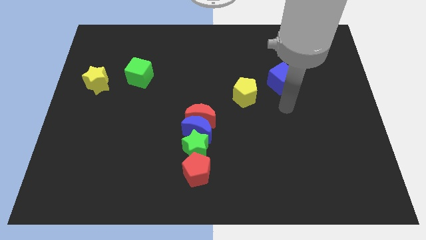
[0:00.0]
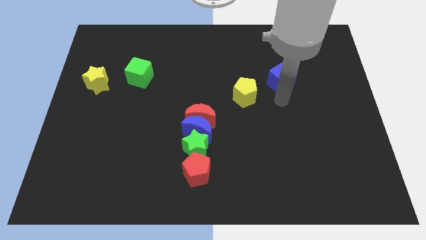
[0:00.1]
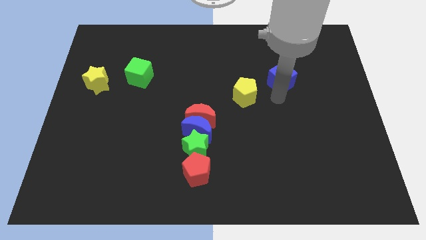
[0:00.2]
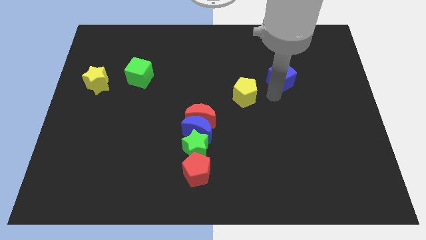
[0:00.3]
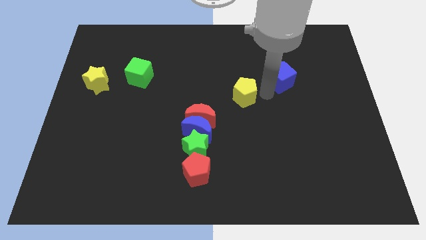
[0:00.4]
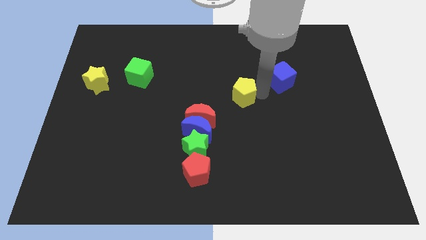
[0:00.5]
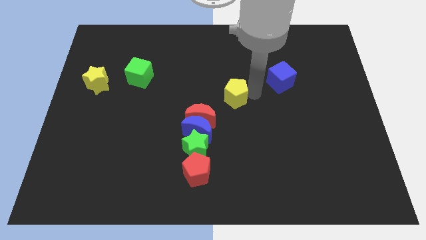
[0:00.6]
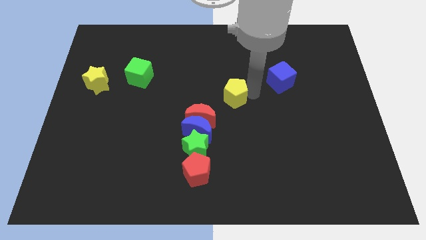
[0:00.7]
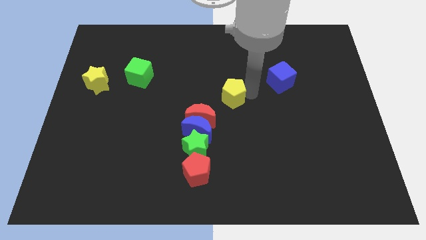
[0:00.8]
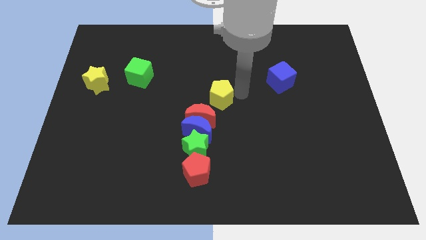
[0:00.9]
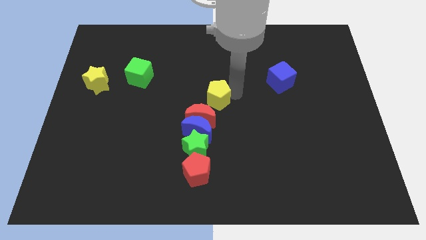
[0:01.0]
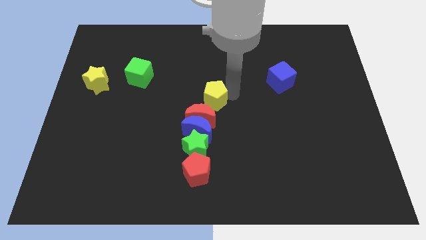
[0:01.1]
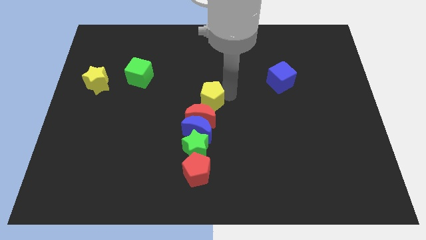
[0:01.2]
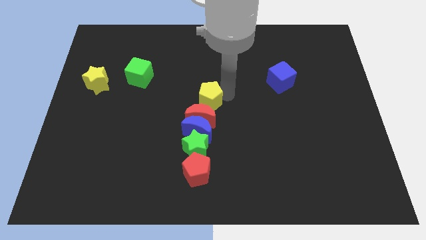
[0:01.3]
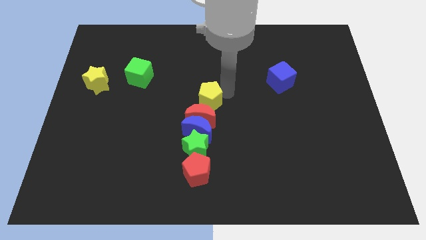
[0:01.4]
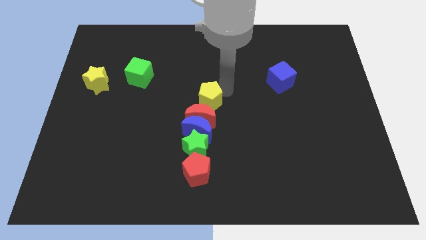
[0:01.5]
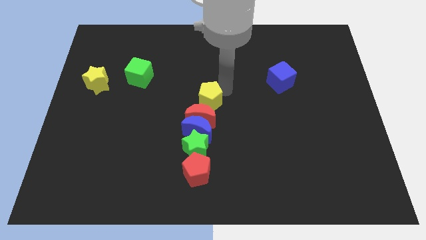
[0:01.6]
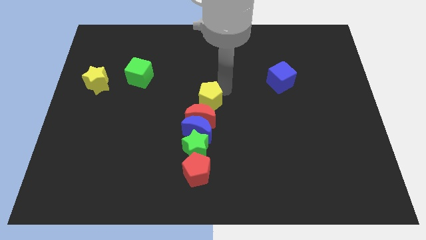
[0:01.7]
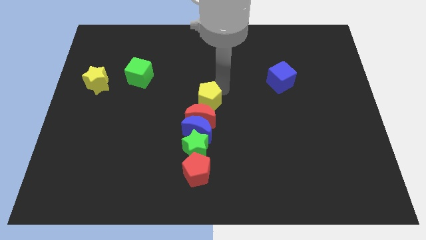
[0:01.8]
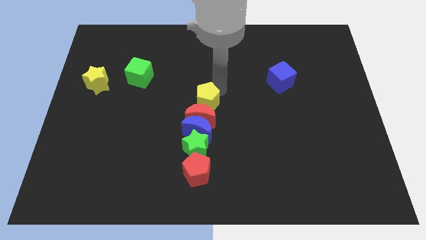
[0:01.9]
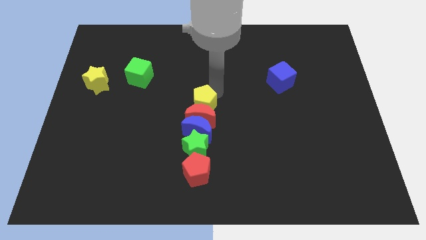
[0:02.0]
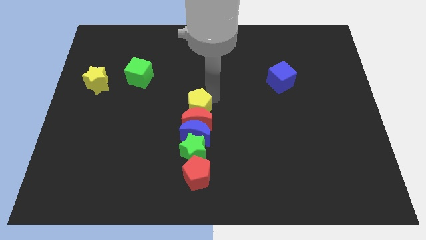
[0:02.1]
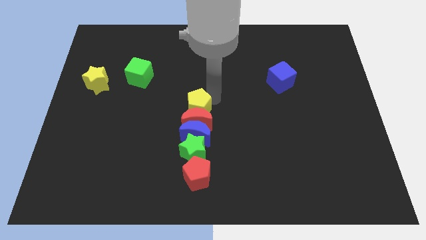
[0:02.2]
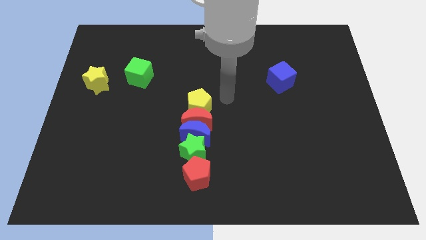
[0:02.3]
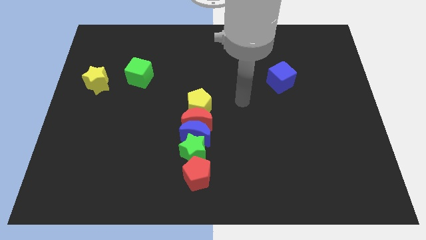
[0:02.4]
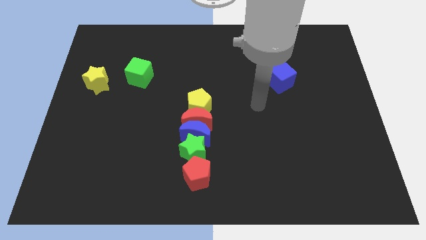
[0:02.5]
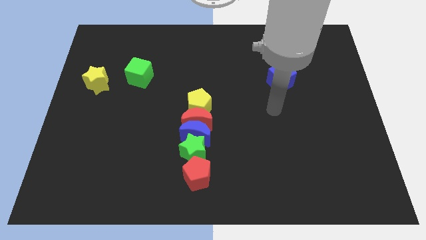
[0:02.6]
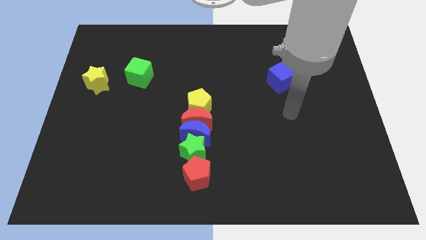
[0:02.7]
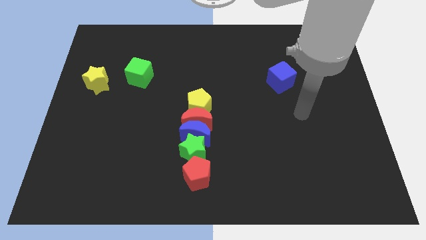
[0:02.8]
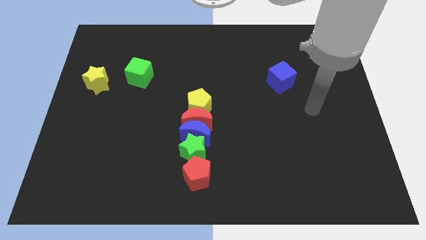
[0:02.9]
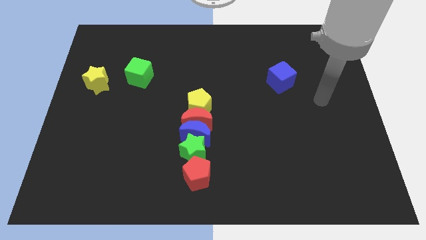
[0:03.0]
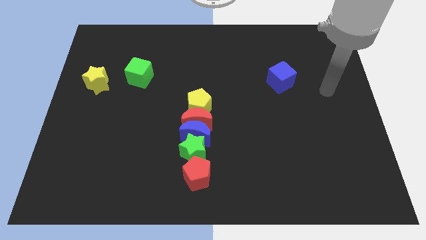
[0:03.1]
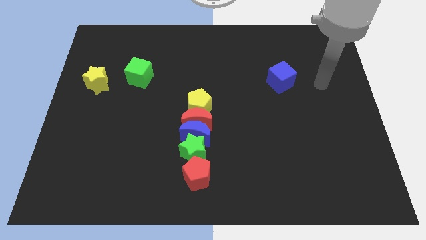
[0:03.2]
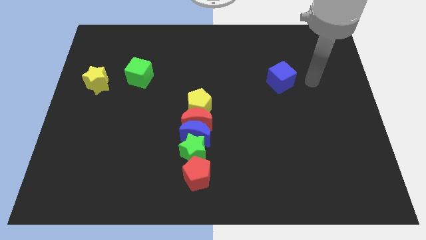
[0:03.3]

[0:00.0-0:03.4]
put the yellow pentagon vertically above the red moon

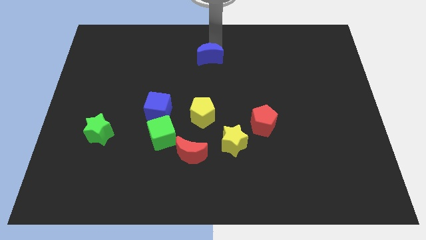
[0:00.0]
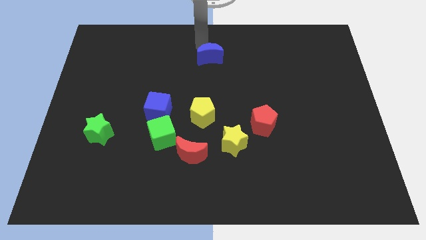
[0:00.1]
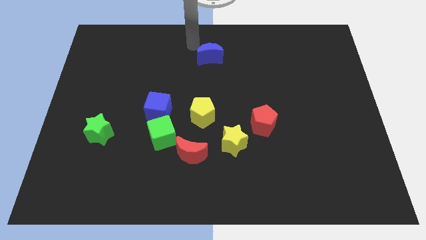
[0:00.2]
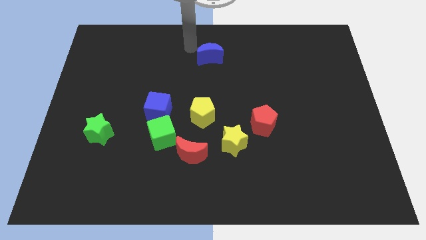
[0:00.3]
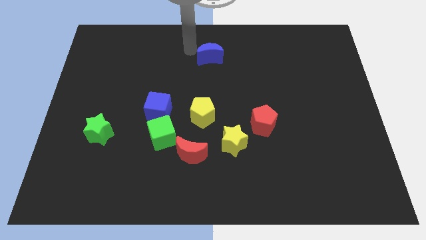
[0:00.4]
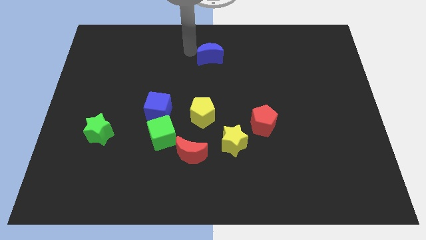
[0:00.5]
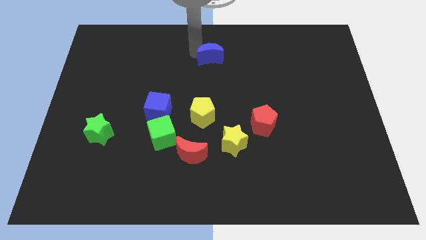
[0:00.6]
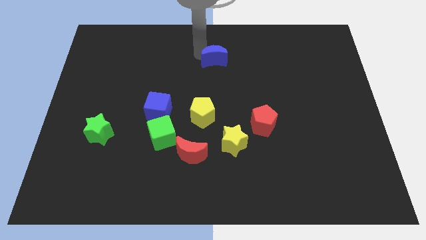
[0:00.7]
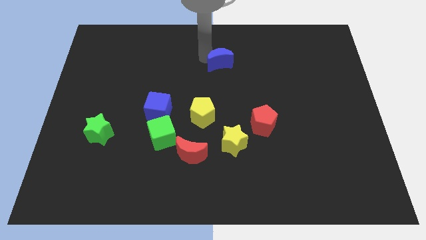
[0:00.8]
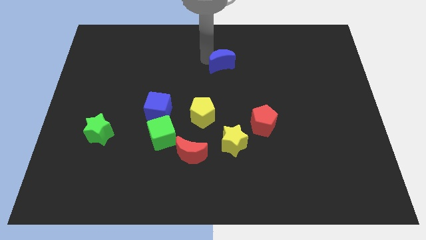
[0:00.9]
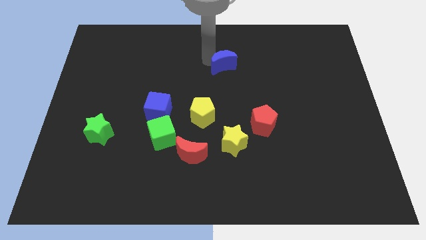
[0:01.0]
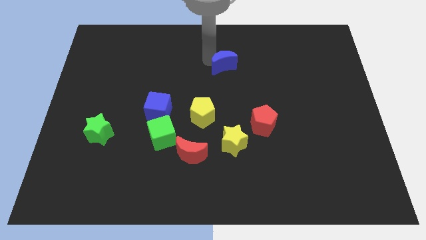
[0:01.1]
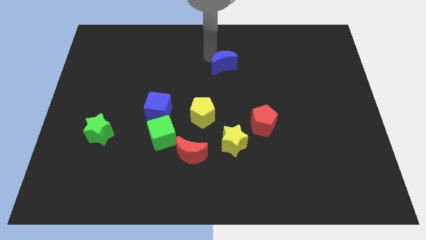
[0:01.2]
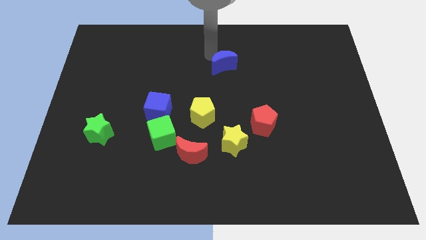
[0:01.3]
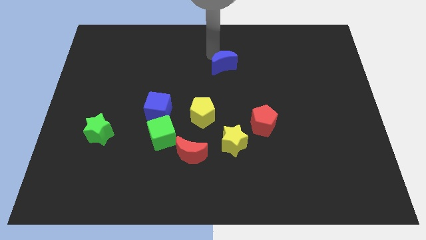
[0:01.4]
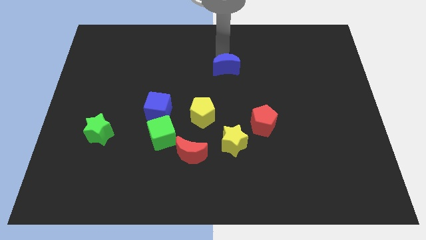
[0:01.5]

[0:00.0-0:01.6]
slide the blue moon towards the center of the board

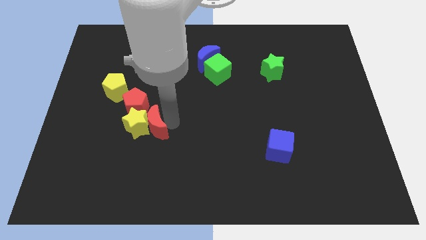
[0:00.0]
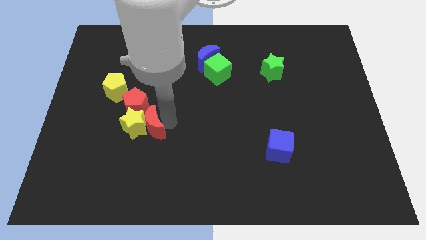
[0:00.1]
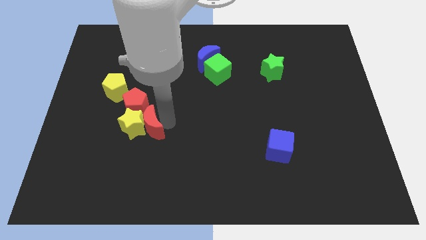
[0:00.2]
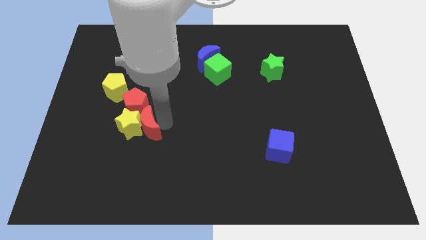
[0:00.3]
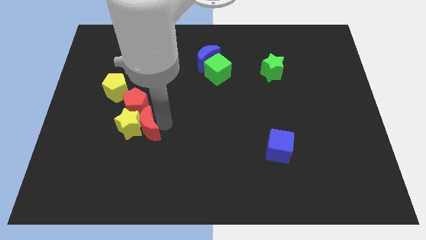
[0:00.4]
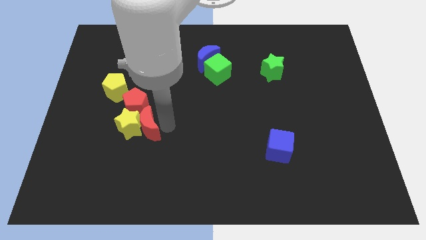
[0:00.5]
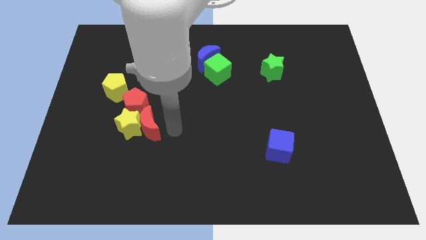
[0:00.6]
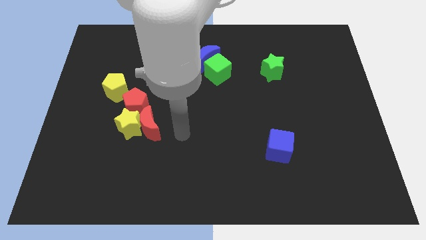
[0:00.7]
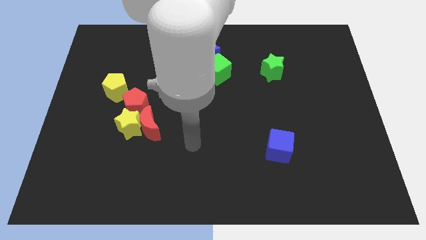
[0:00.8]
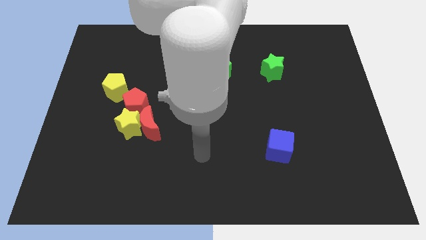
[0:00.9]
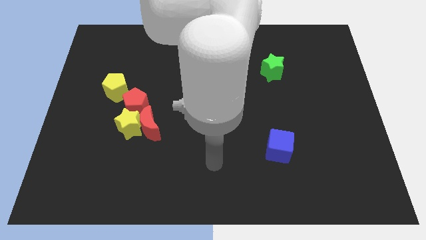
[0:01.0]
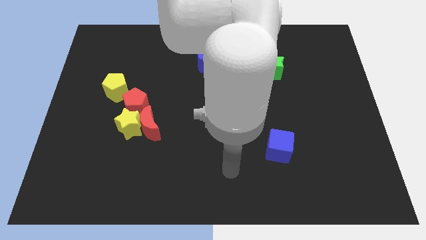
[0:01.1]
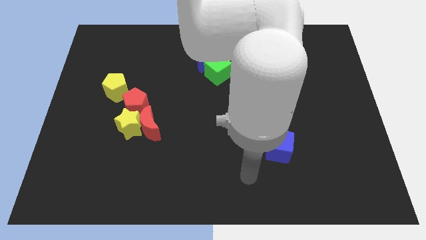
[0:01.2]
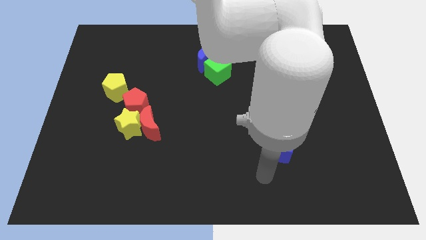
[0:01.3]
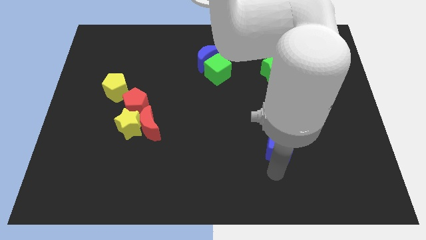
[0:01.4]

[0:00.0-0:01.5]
place your arm at the bottom side of the blue cube

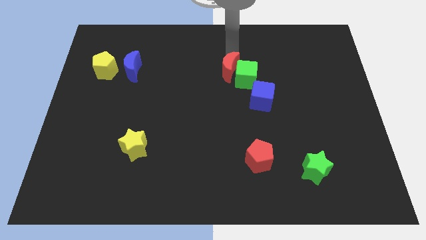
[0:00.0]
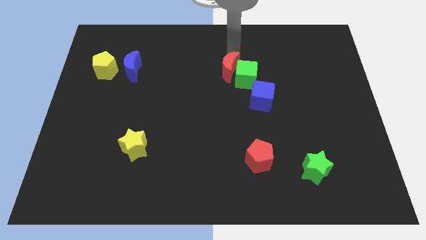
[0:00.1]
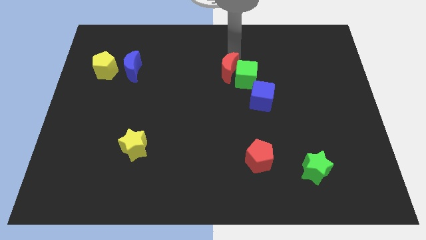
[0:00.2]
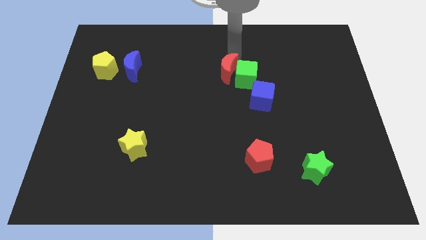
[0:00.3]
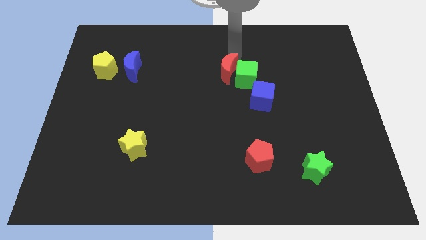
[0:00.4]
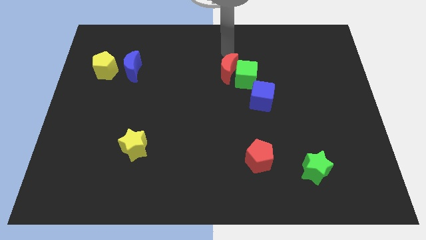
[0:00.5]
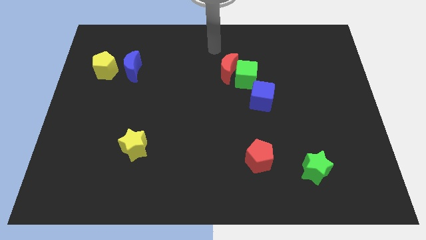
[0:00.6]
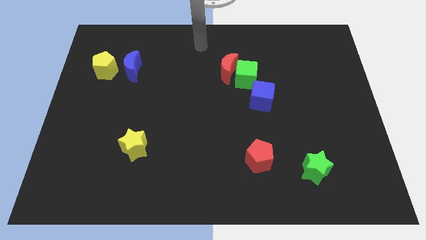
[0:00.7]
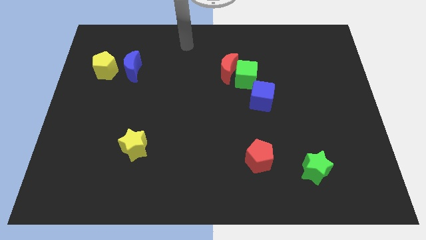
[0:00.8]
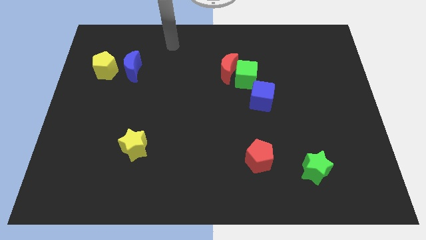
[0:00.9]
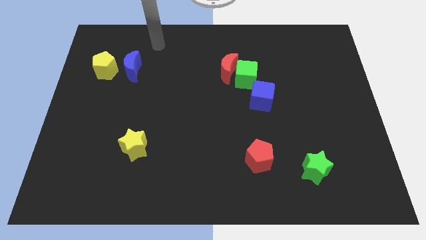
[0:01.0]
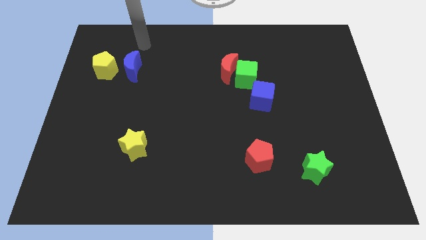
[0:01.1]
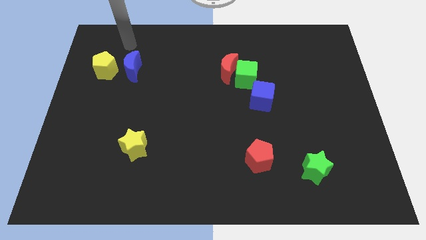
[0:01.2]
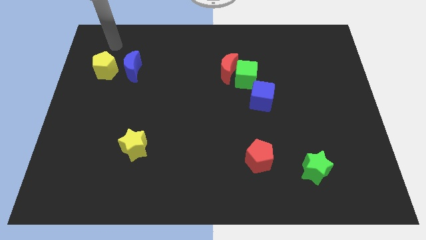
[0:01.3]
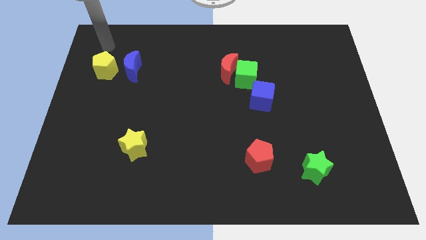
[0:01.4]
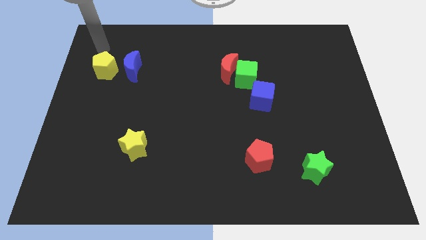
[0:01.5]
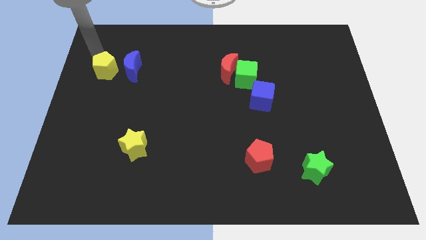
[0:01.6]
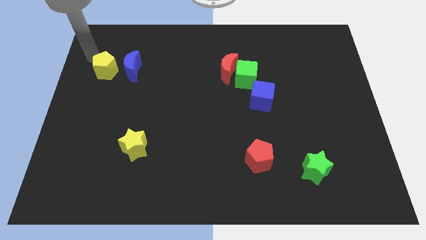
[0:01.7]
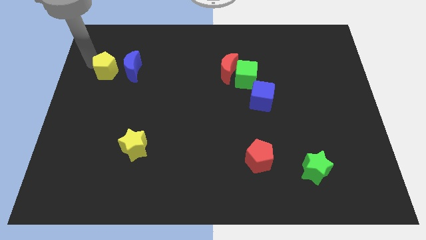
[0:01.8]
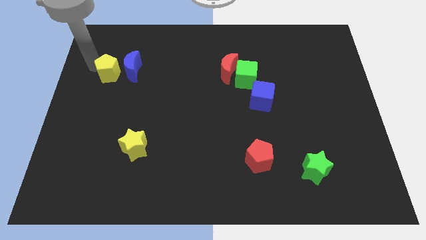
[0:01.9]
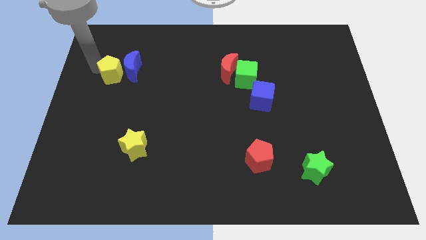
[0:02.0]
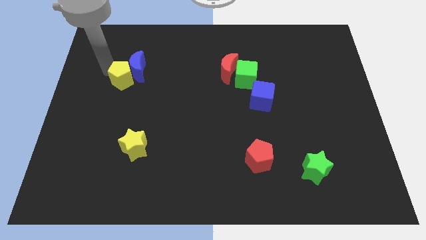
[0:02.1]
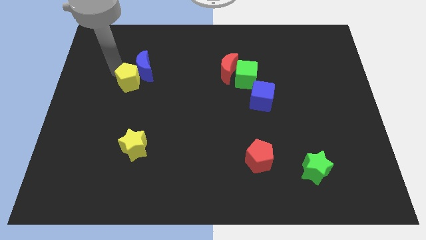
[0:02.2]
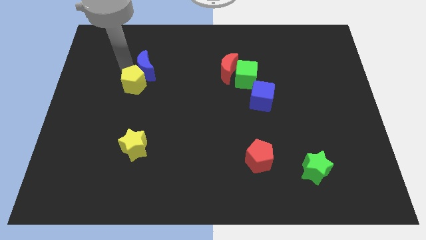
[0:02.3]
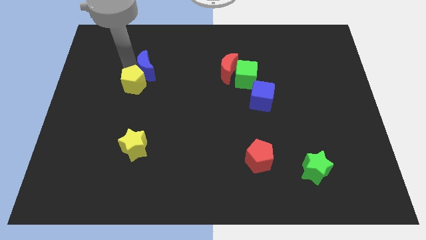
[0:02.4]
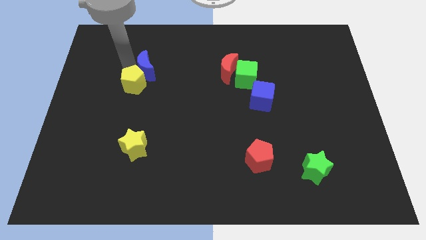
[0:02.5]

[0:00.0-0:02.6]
move yellow pentagon near blue moon
